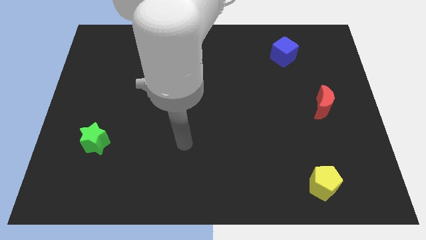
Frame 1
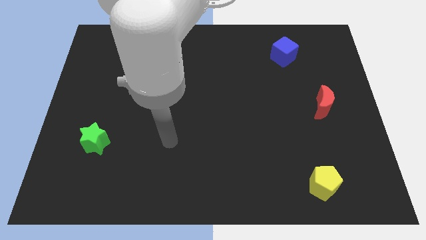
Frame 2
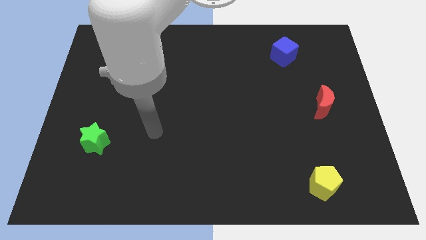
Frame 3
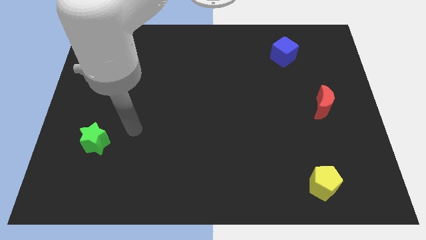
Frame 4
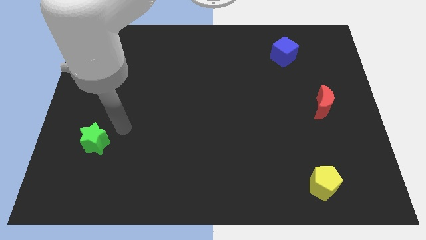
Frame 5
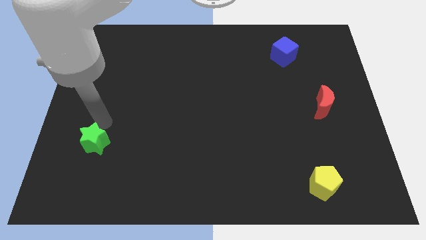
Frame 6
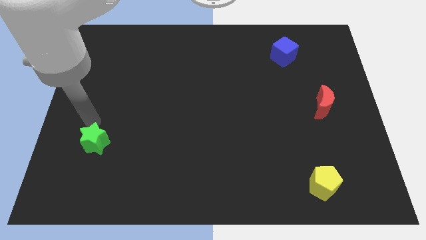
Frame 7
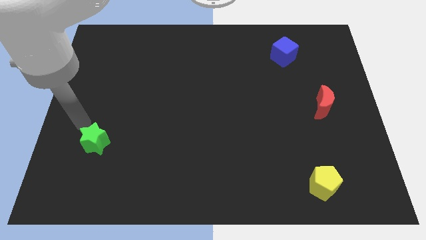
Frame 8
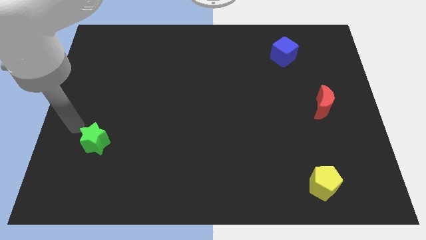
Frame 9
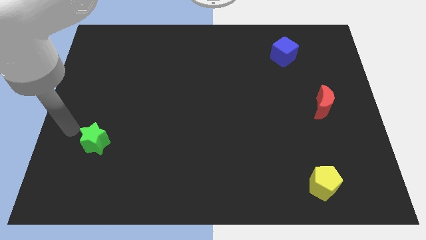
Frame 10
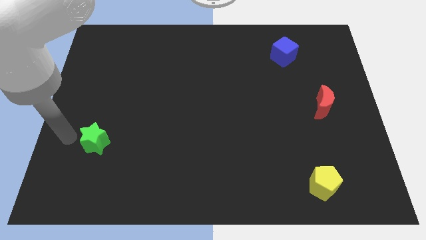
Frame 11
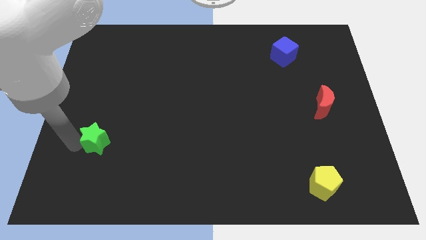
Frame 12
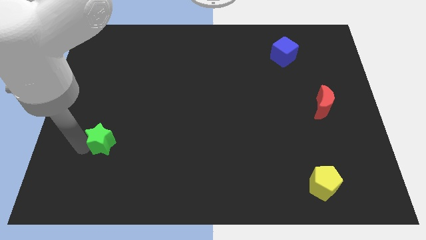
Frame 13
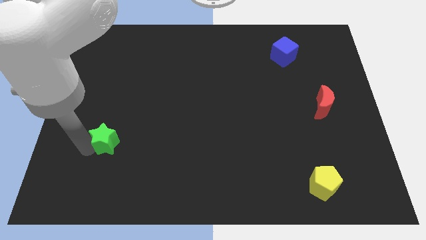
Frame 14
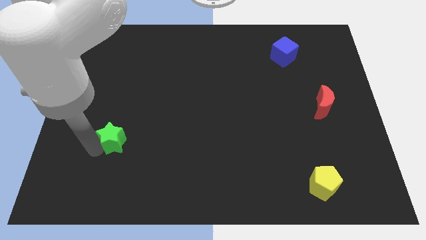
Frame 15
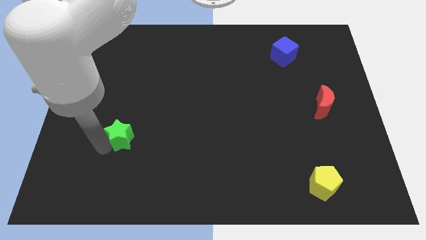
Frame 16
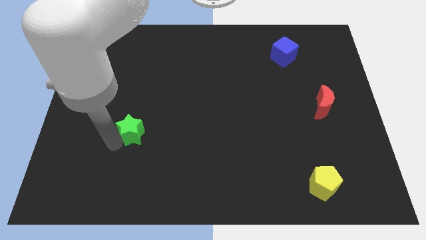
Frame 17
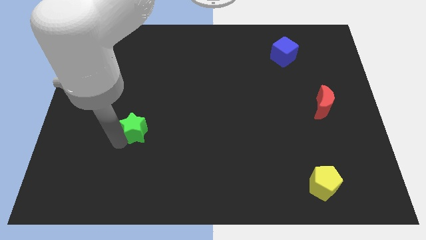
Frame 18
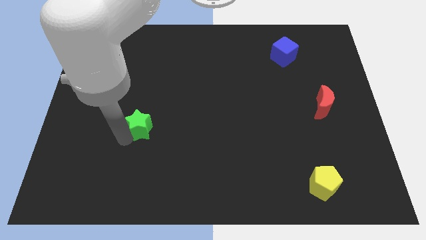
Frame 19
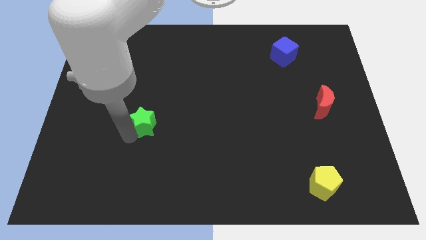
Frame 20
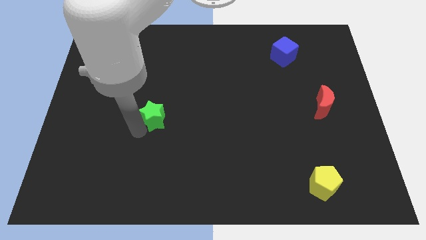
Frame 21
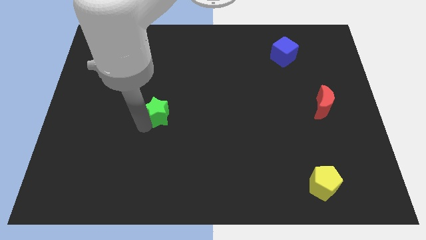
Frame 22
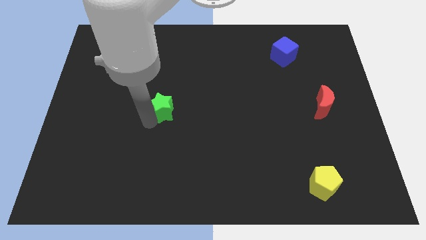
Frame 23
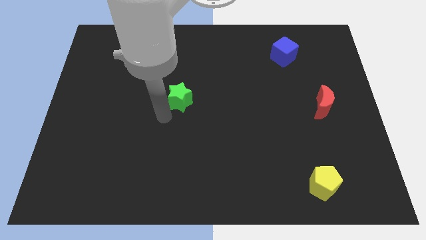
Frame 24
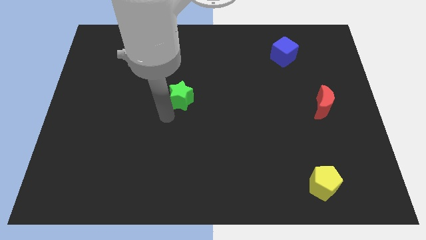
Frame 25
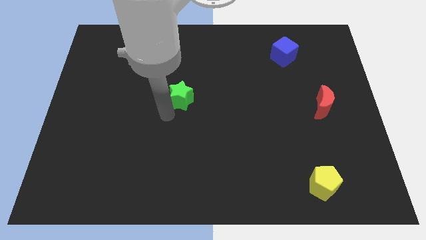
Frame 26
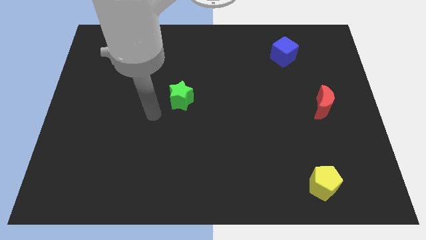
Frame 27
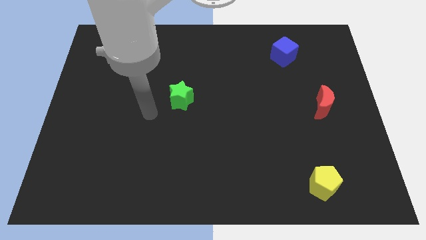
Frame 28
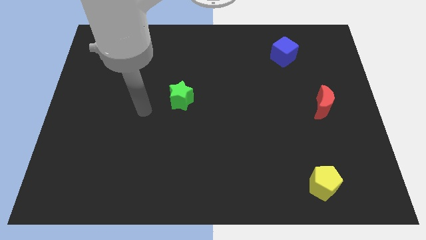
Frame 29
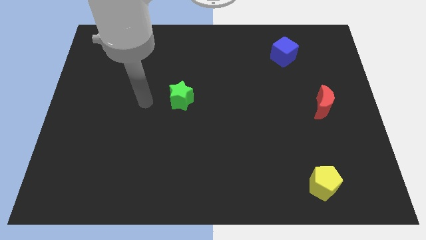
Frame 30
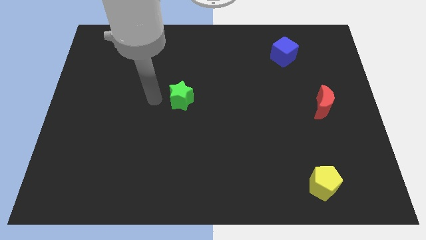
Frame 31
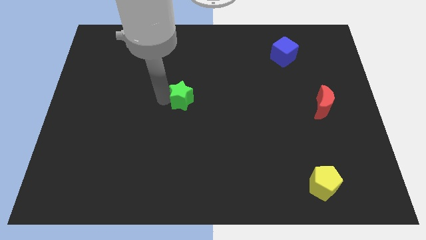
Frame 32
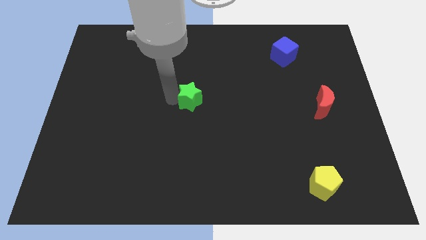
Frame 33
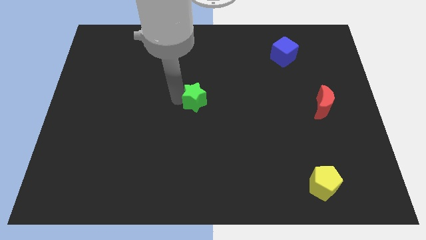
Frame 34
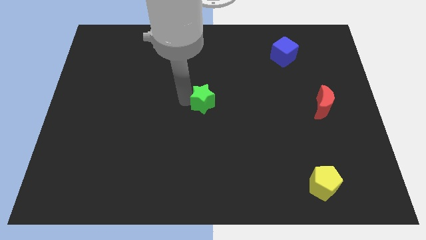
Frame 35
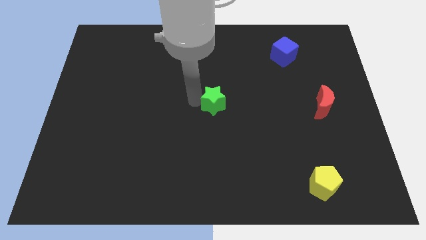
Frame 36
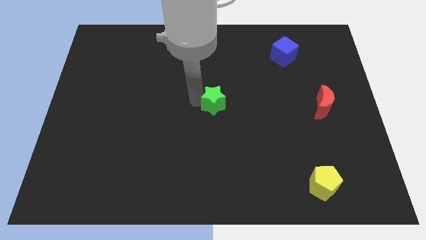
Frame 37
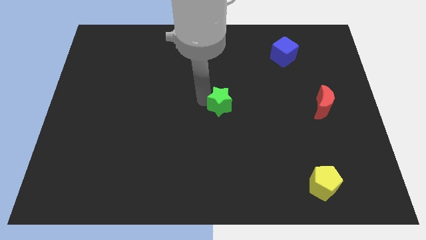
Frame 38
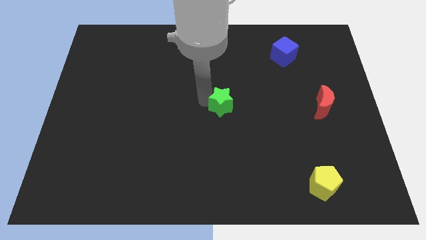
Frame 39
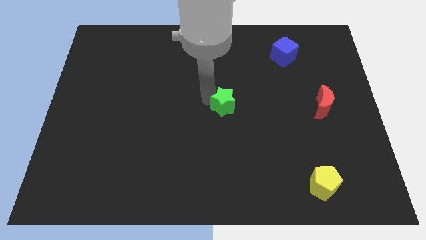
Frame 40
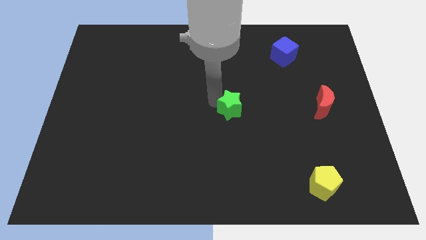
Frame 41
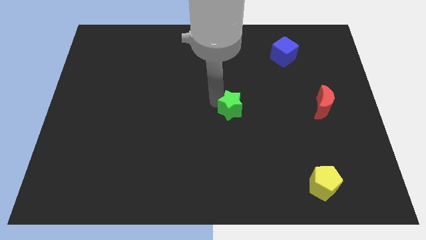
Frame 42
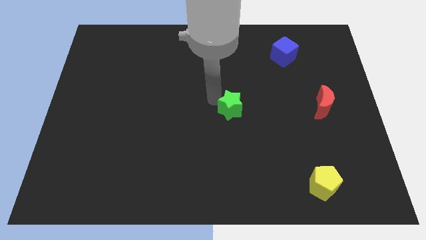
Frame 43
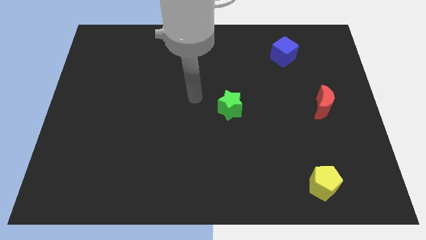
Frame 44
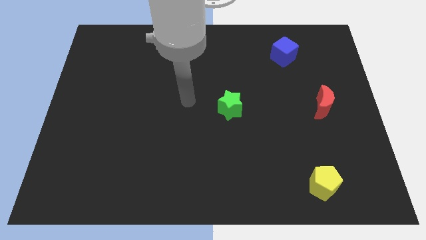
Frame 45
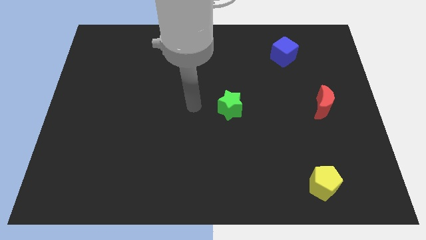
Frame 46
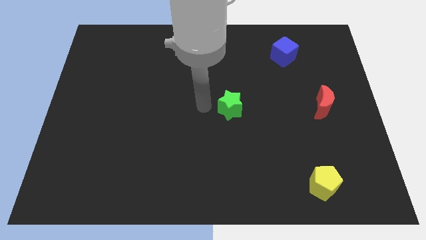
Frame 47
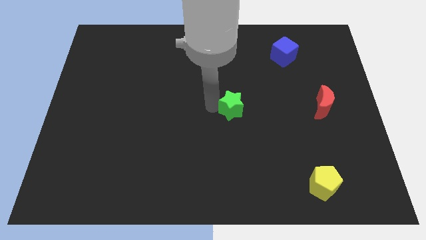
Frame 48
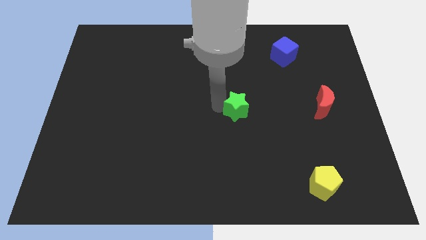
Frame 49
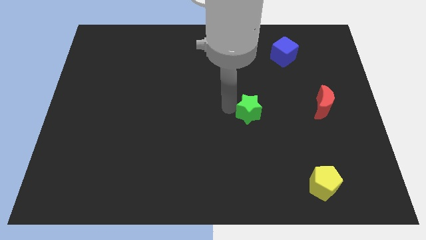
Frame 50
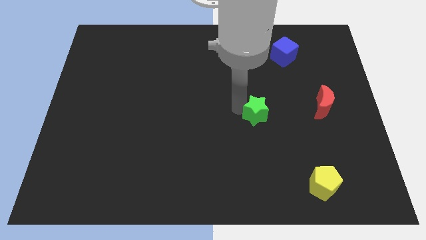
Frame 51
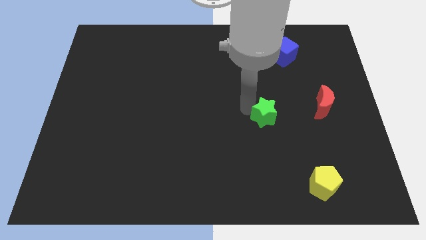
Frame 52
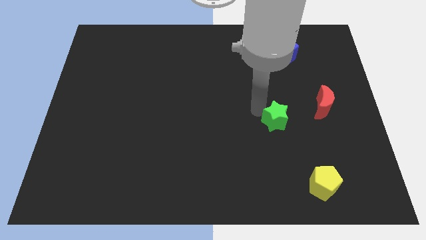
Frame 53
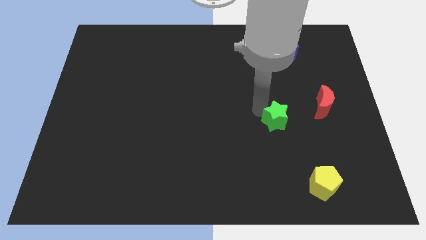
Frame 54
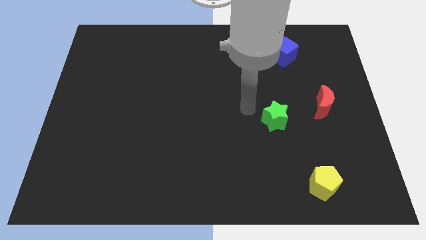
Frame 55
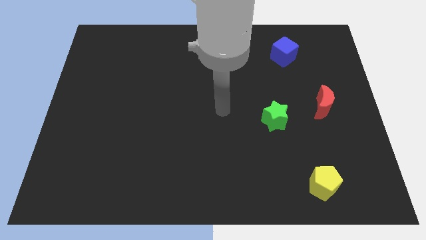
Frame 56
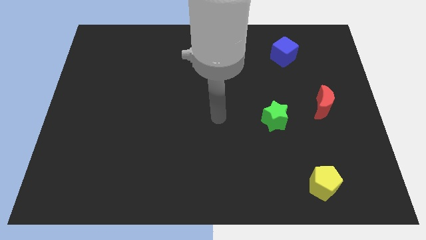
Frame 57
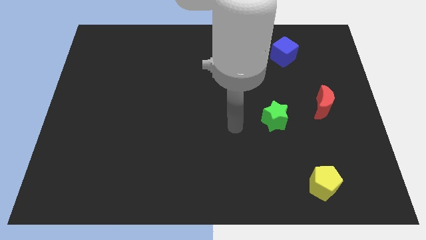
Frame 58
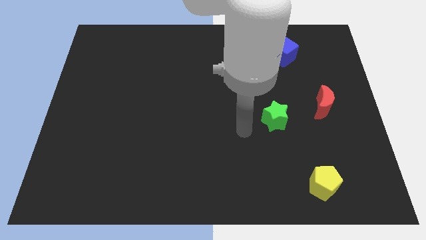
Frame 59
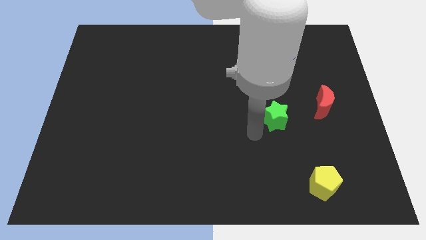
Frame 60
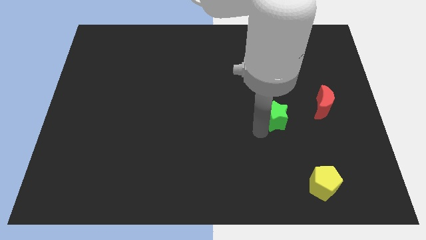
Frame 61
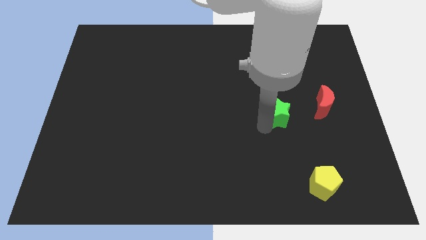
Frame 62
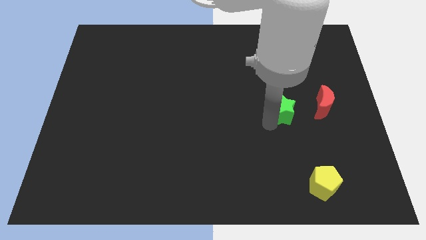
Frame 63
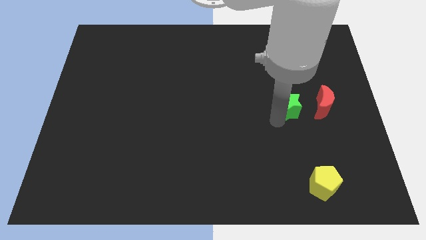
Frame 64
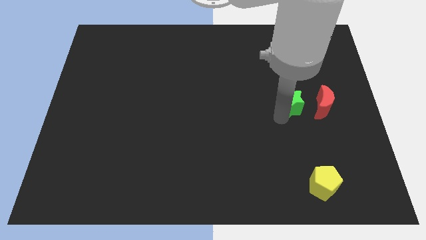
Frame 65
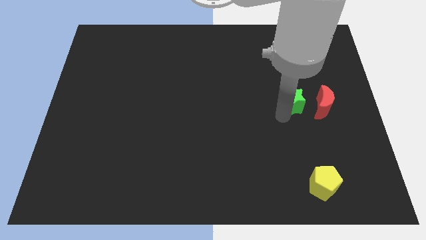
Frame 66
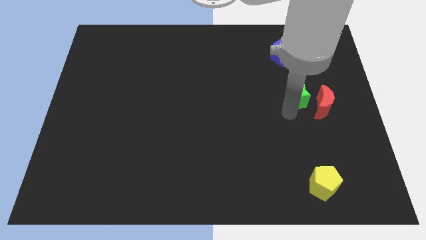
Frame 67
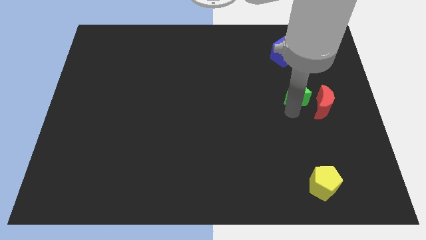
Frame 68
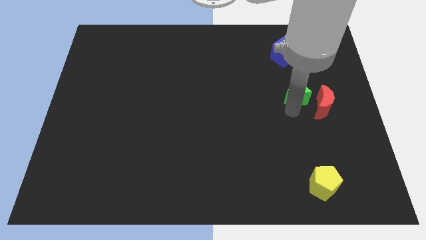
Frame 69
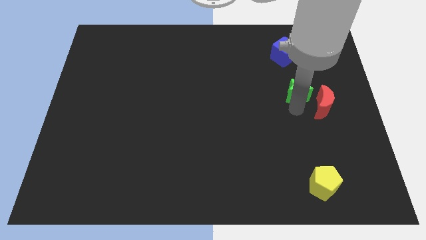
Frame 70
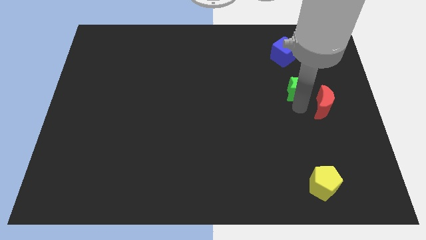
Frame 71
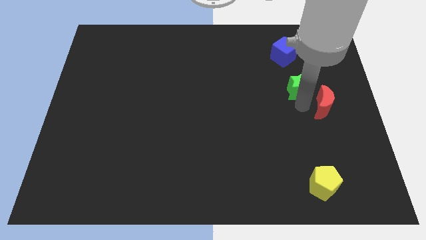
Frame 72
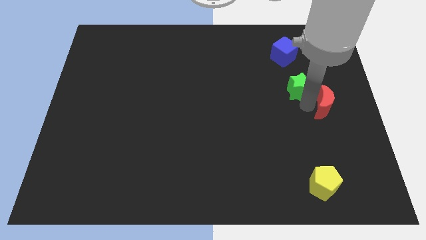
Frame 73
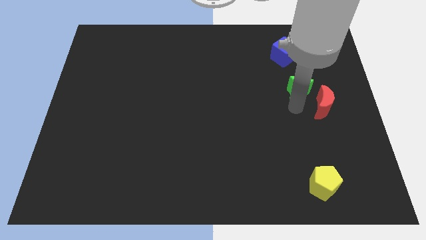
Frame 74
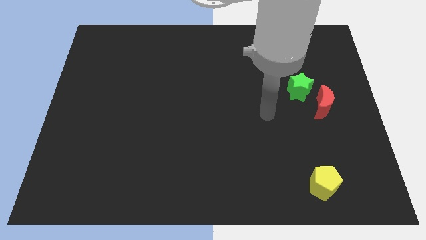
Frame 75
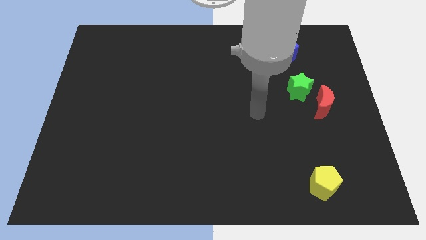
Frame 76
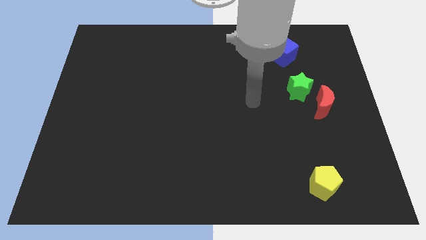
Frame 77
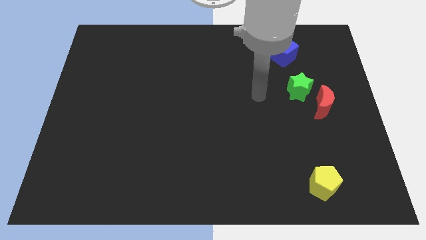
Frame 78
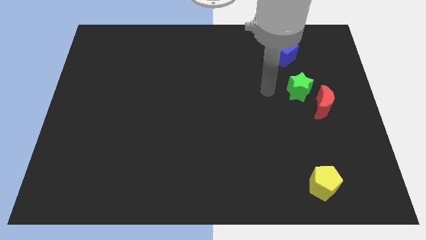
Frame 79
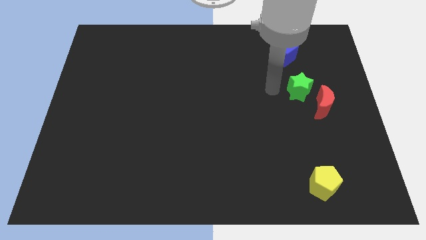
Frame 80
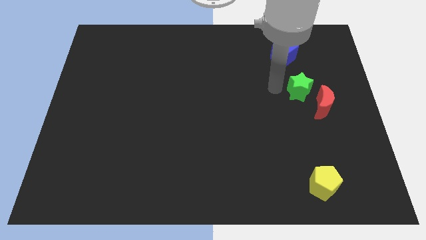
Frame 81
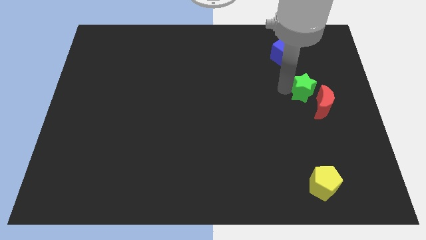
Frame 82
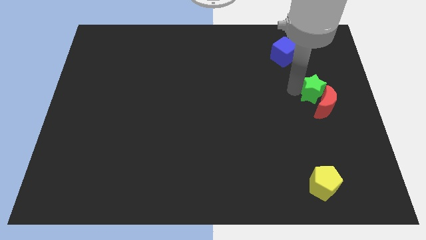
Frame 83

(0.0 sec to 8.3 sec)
move the green block to the moon
